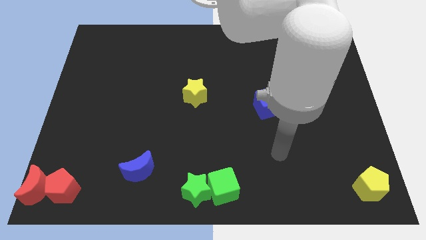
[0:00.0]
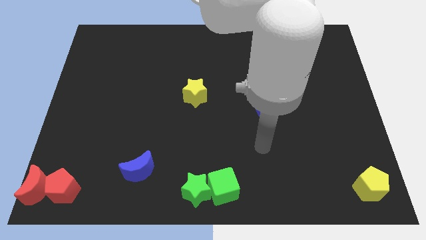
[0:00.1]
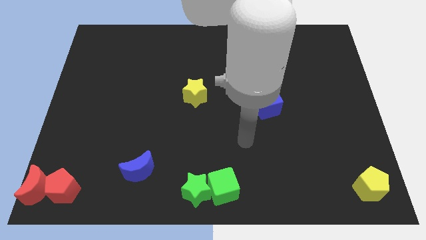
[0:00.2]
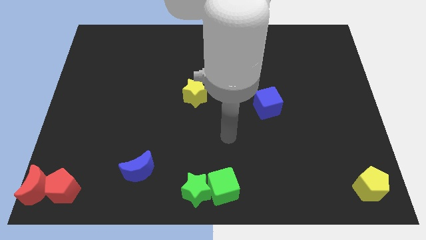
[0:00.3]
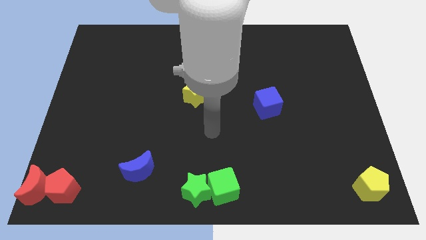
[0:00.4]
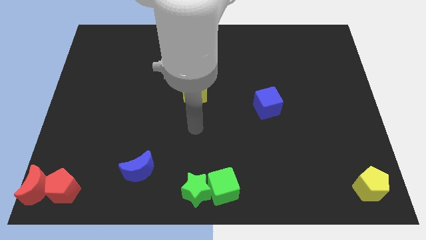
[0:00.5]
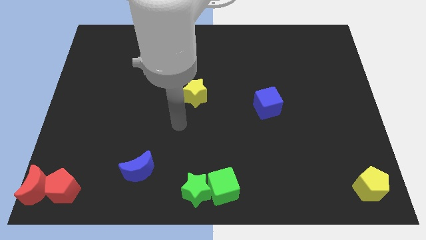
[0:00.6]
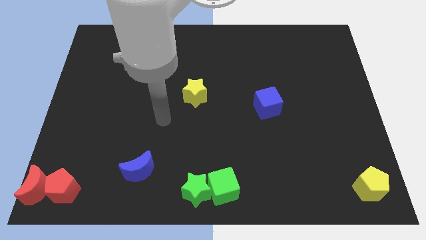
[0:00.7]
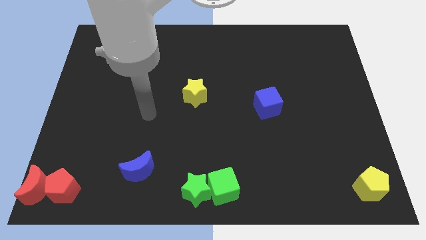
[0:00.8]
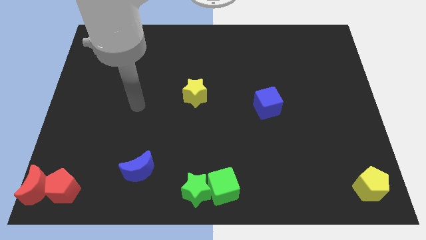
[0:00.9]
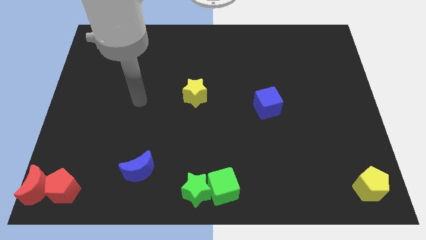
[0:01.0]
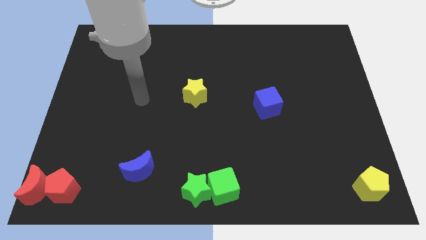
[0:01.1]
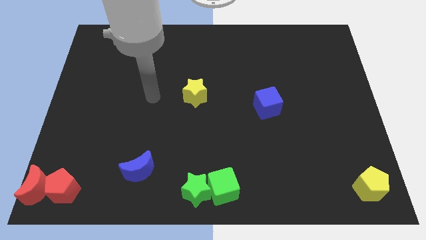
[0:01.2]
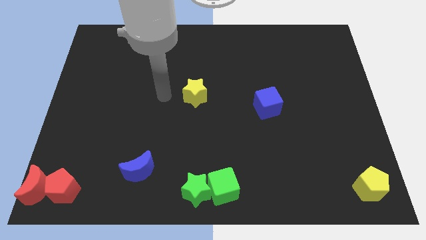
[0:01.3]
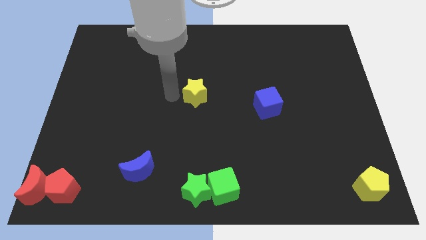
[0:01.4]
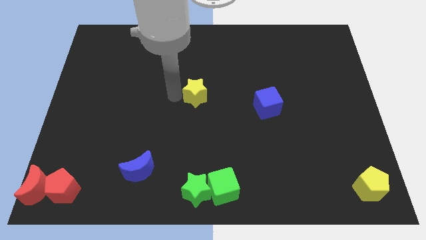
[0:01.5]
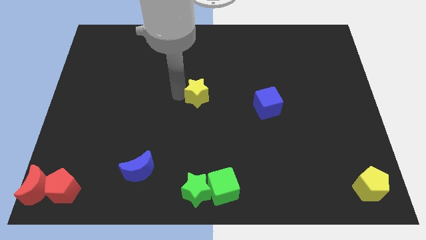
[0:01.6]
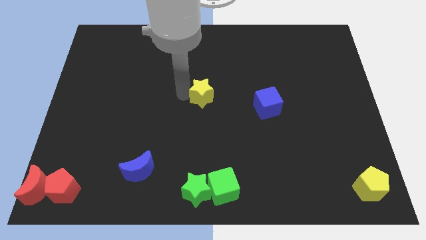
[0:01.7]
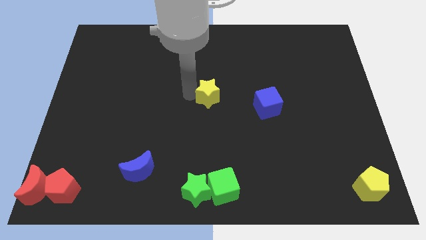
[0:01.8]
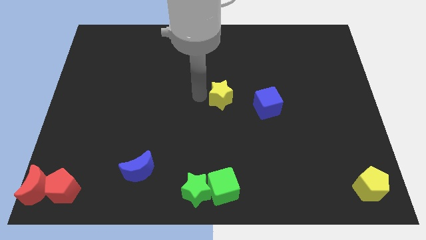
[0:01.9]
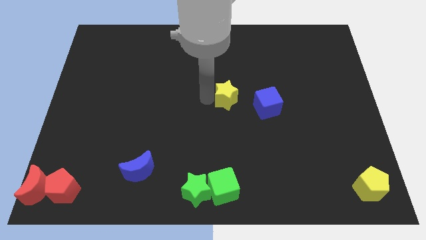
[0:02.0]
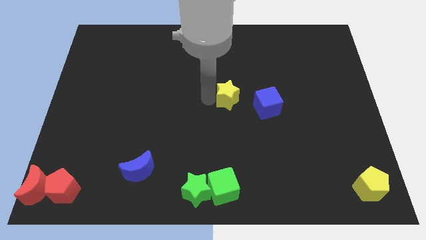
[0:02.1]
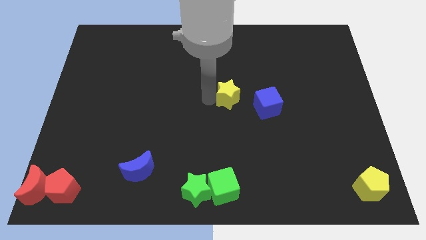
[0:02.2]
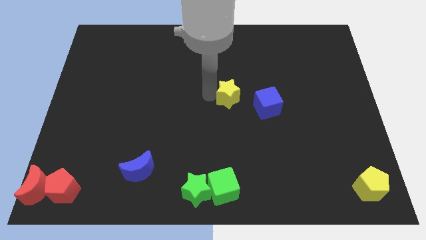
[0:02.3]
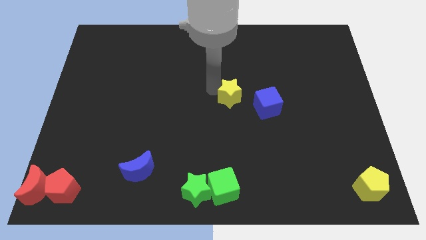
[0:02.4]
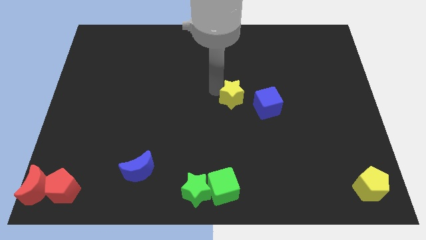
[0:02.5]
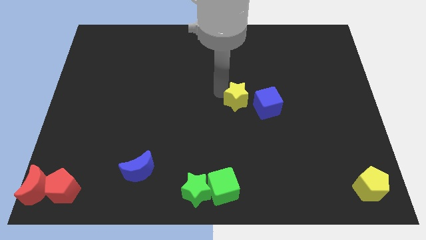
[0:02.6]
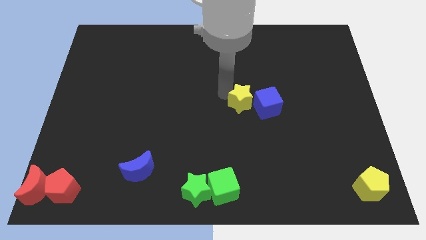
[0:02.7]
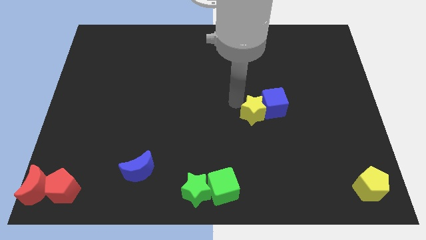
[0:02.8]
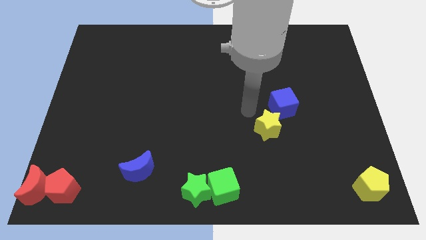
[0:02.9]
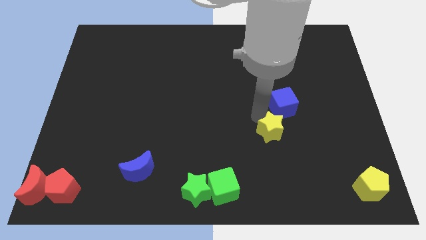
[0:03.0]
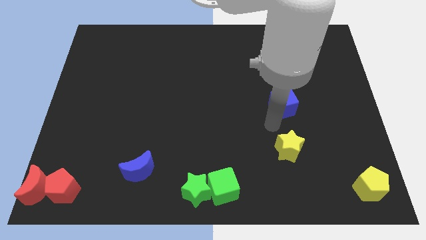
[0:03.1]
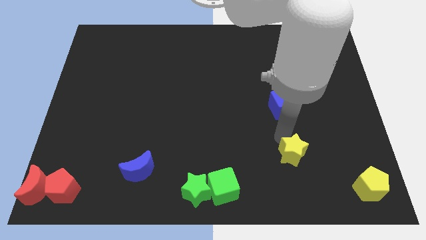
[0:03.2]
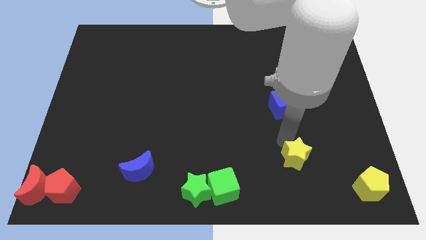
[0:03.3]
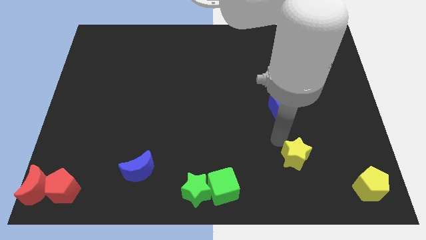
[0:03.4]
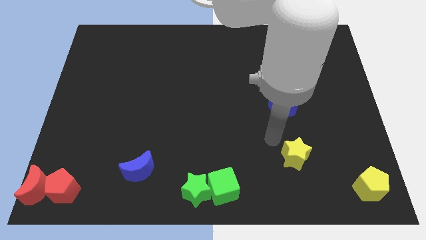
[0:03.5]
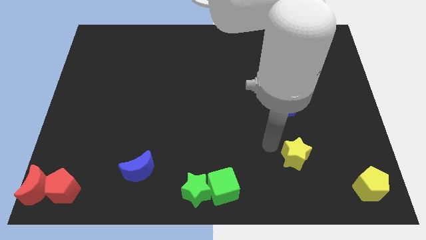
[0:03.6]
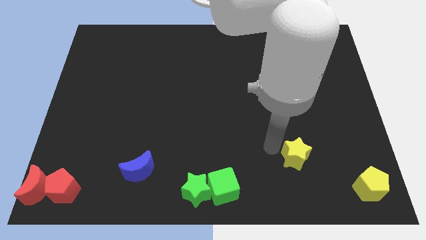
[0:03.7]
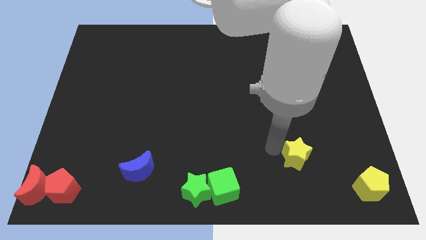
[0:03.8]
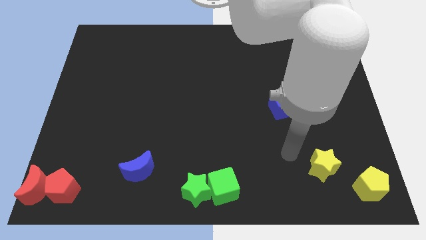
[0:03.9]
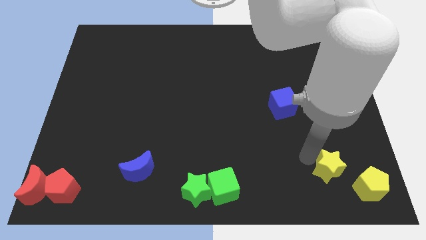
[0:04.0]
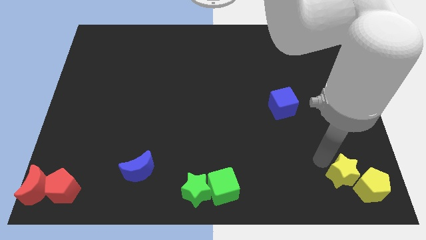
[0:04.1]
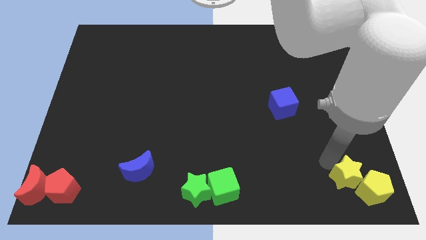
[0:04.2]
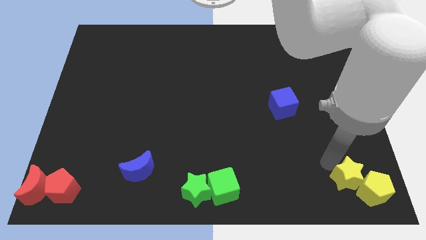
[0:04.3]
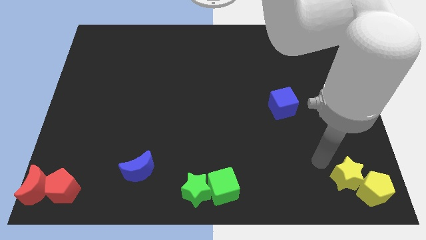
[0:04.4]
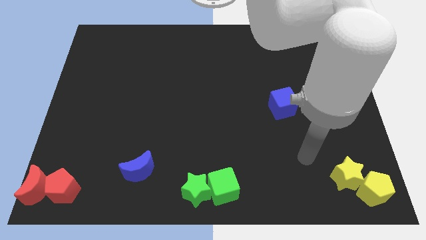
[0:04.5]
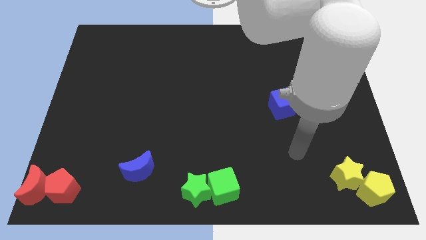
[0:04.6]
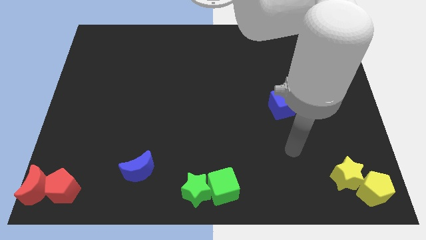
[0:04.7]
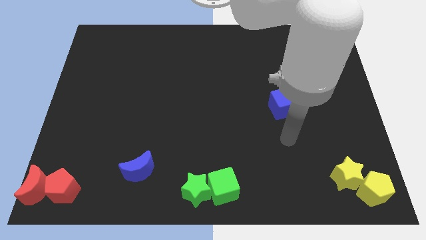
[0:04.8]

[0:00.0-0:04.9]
move the yellow star diagonally left above the yellow pentagon

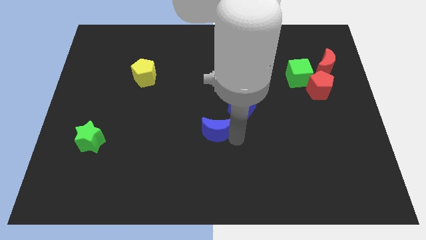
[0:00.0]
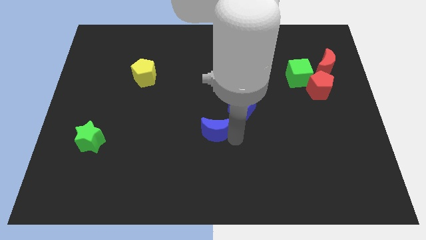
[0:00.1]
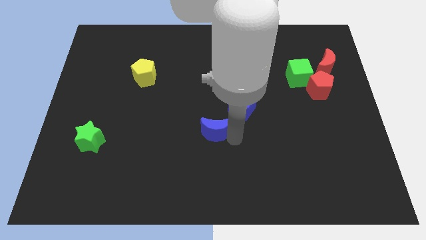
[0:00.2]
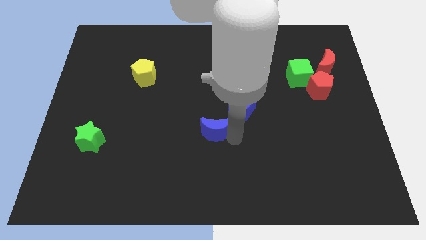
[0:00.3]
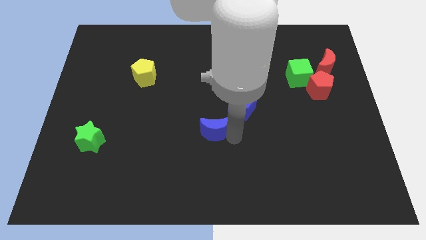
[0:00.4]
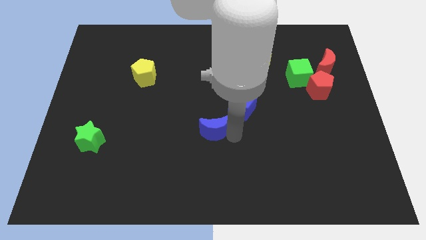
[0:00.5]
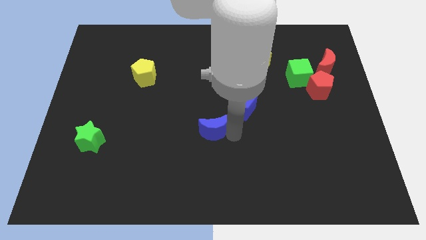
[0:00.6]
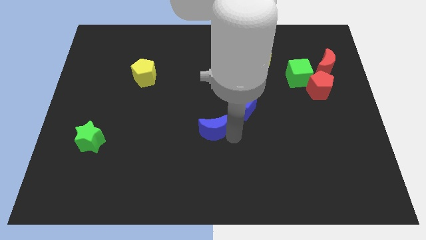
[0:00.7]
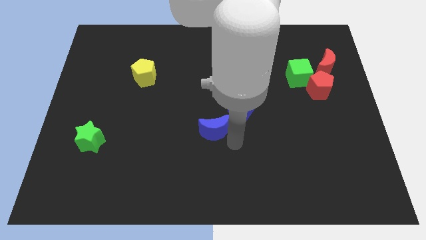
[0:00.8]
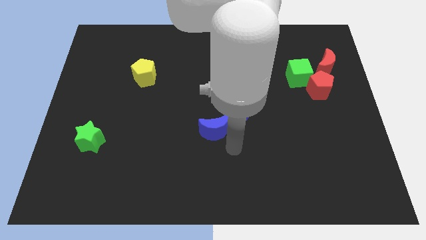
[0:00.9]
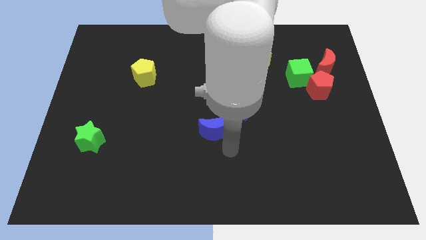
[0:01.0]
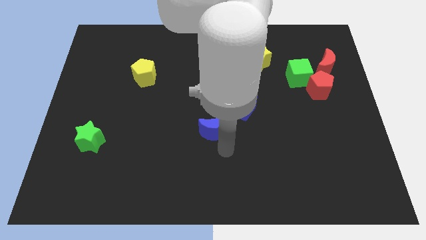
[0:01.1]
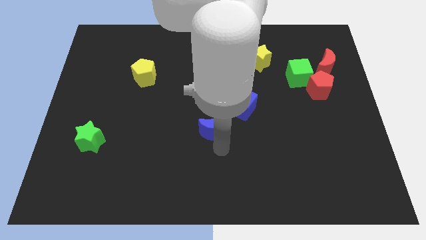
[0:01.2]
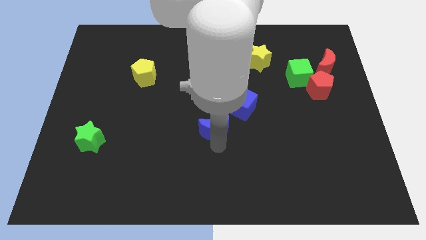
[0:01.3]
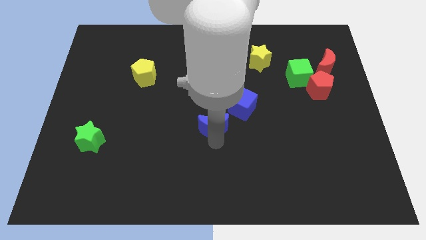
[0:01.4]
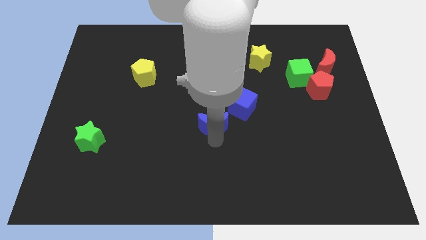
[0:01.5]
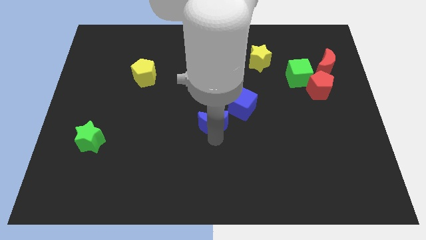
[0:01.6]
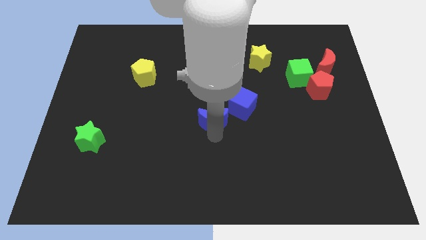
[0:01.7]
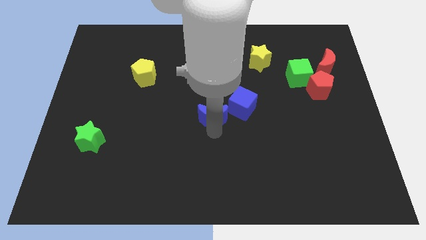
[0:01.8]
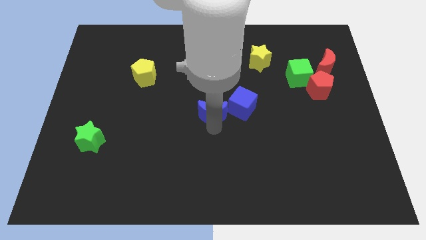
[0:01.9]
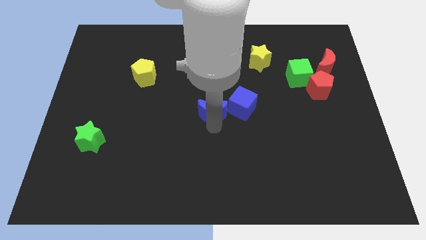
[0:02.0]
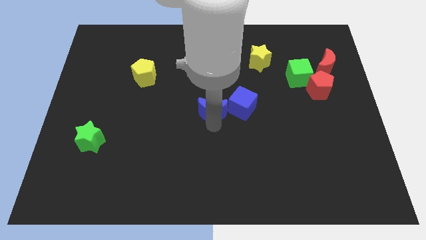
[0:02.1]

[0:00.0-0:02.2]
push blue moon to the left of the blue cube

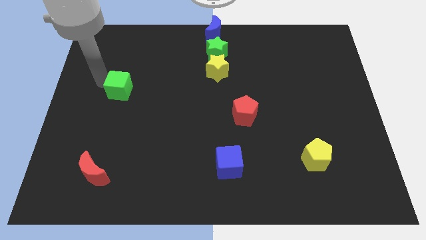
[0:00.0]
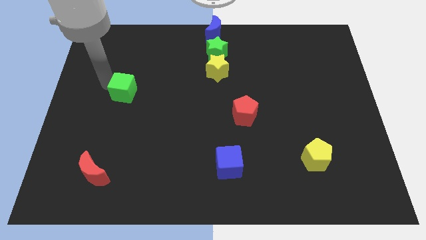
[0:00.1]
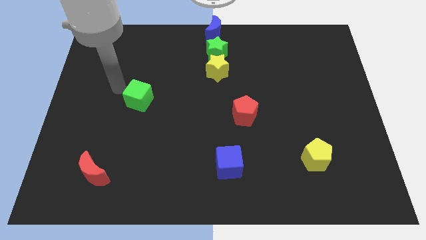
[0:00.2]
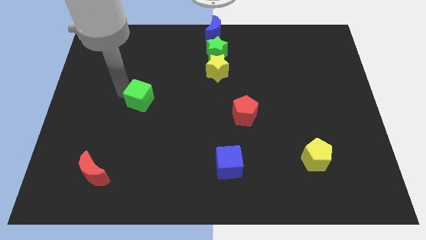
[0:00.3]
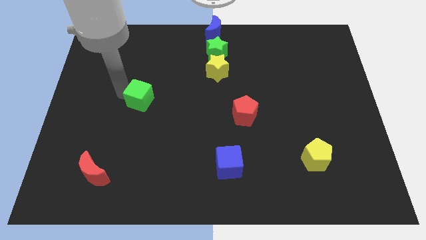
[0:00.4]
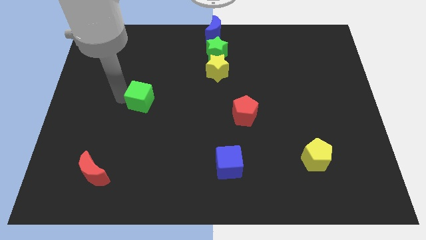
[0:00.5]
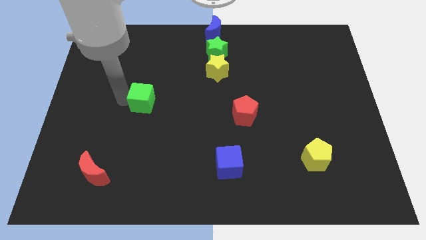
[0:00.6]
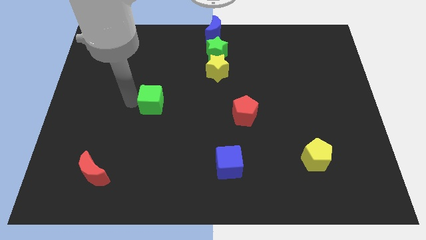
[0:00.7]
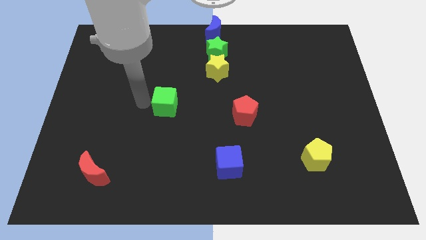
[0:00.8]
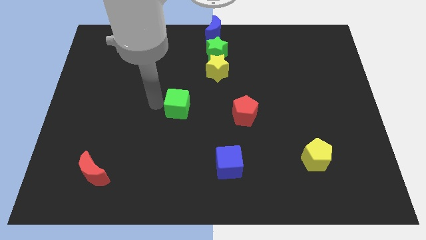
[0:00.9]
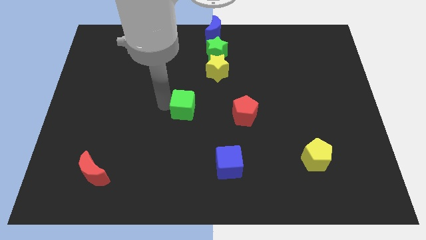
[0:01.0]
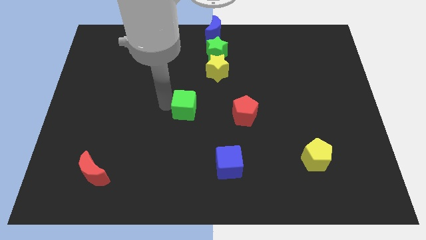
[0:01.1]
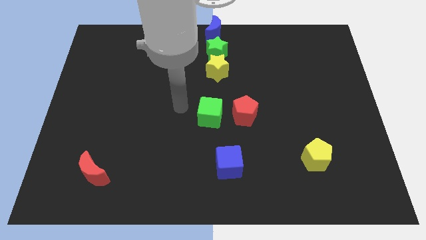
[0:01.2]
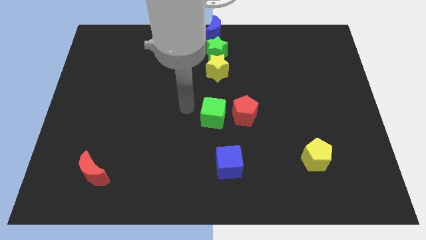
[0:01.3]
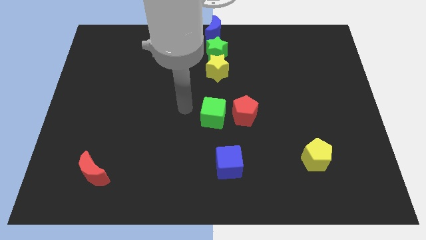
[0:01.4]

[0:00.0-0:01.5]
push the green cube towards the center of the board

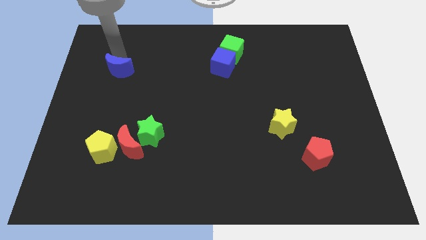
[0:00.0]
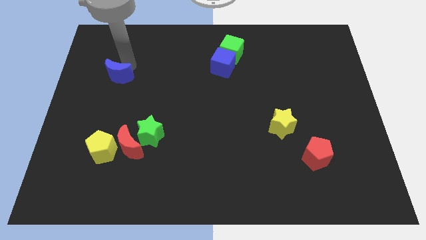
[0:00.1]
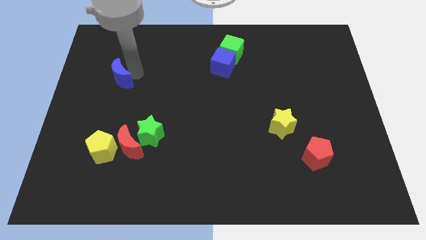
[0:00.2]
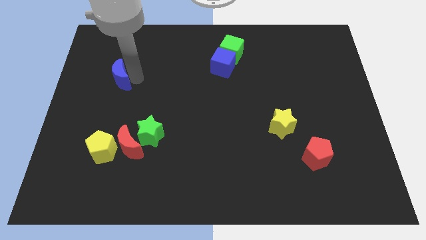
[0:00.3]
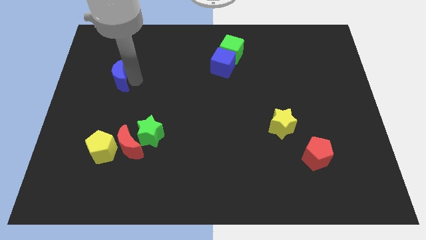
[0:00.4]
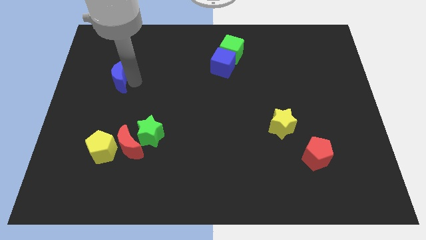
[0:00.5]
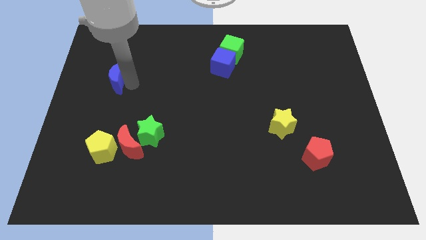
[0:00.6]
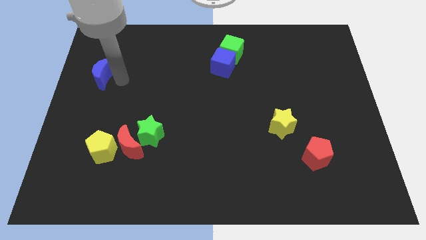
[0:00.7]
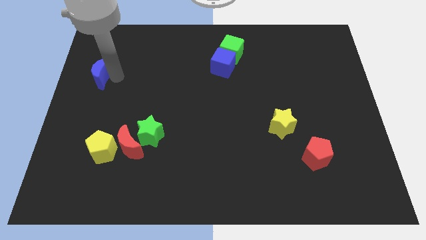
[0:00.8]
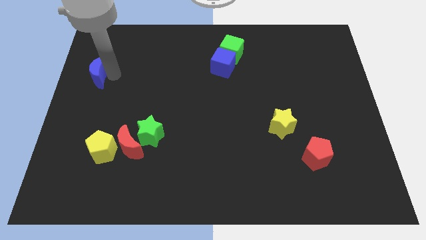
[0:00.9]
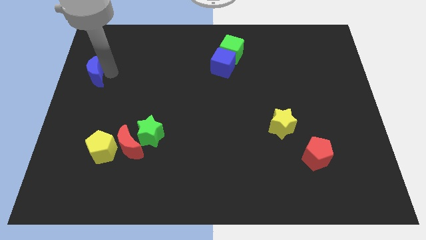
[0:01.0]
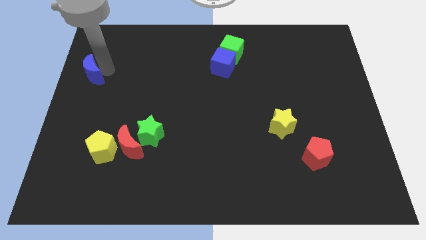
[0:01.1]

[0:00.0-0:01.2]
push the blue crescent towards the left of the board
